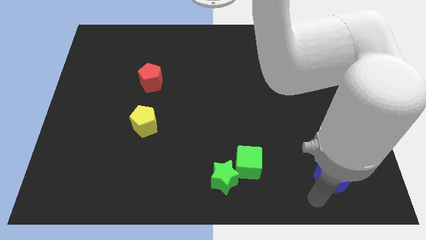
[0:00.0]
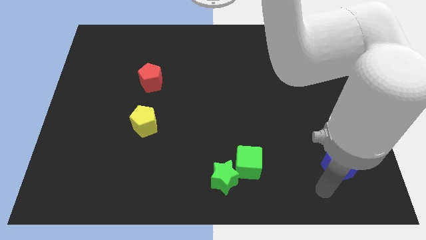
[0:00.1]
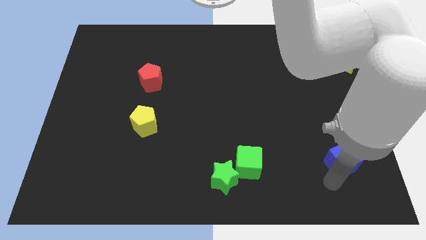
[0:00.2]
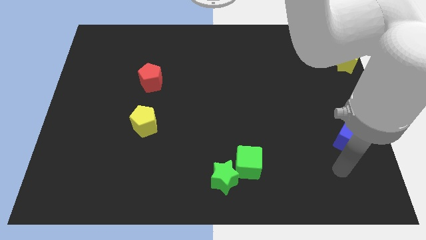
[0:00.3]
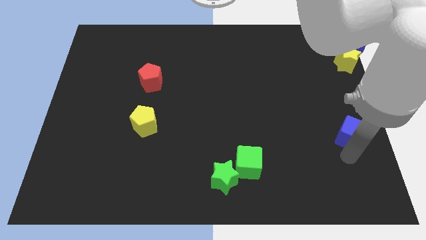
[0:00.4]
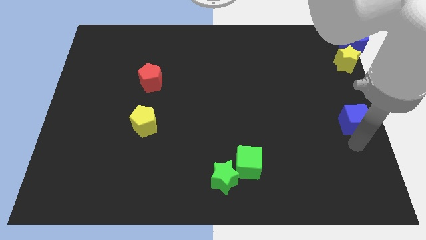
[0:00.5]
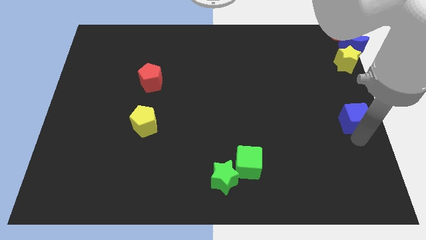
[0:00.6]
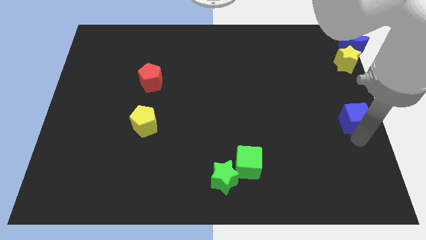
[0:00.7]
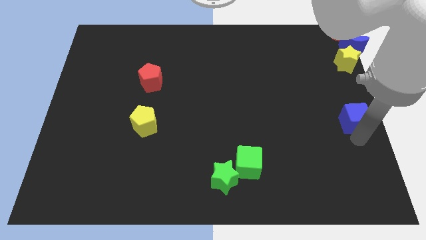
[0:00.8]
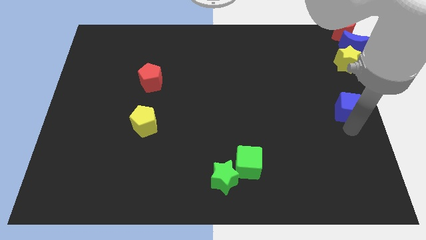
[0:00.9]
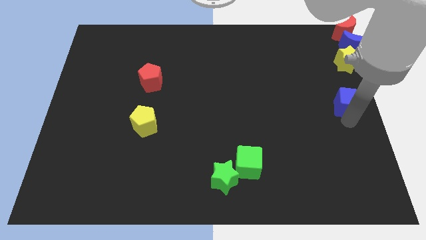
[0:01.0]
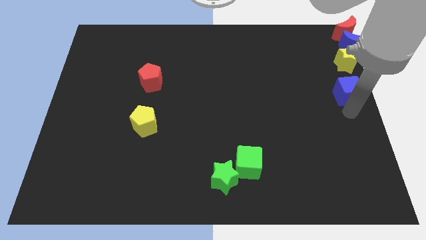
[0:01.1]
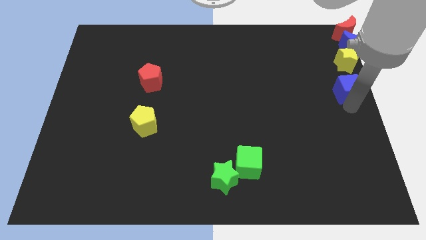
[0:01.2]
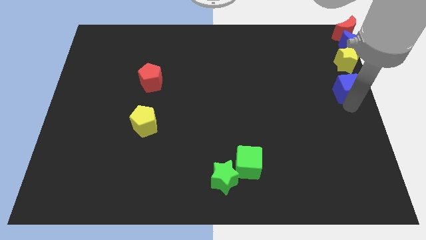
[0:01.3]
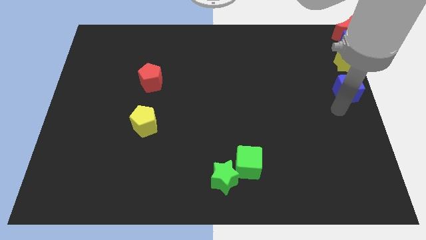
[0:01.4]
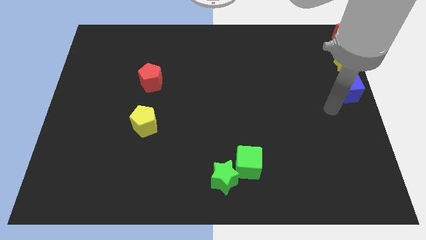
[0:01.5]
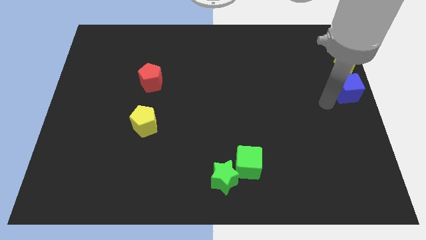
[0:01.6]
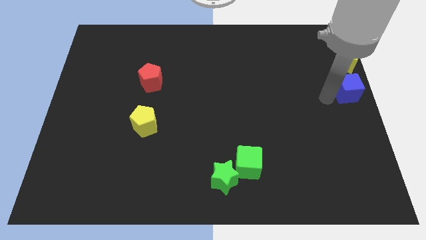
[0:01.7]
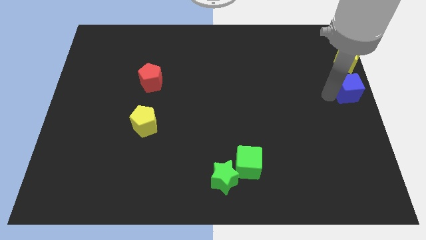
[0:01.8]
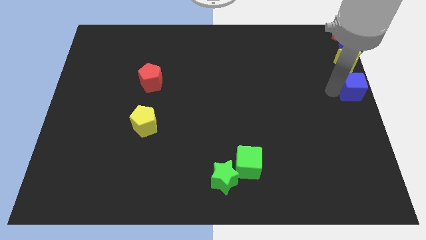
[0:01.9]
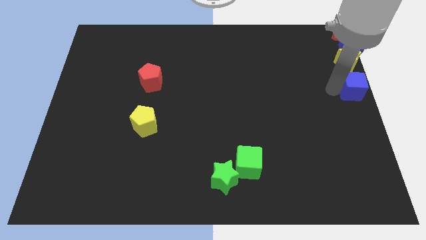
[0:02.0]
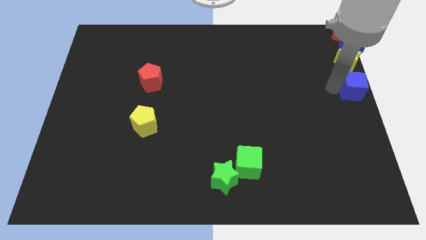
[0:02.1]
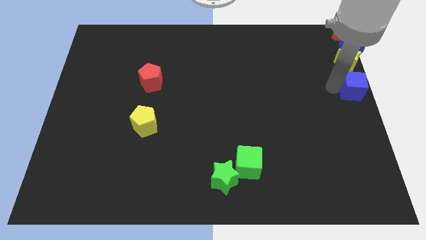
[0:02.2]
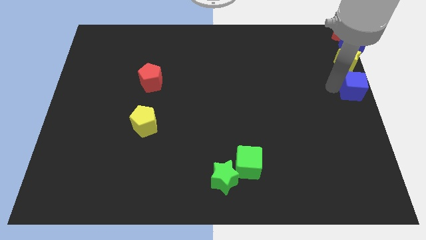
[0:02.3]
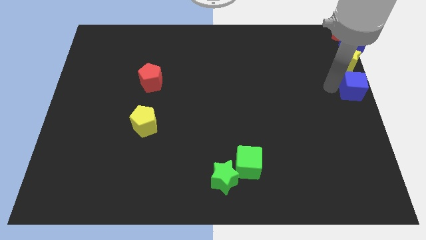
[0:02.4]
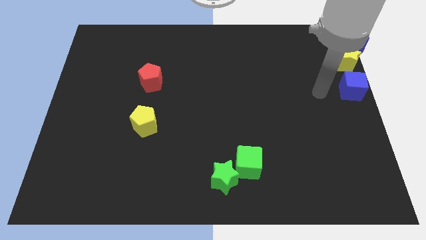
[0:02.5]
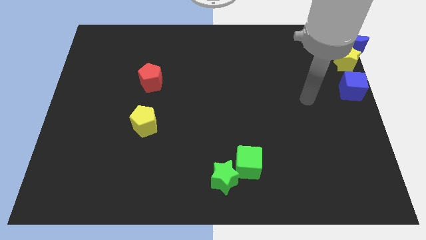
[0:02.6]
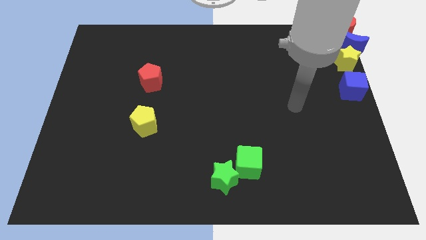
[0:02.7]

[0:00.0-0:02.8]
push blue moon towards yellow star

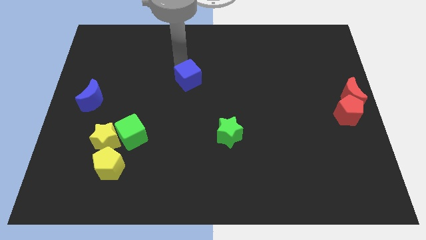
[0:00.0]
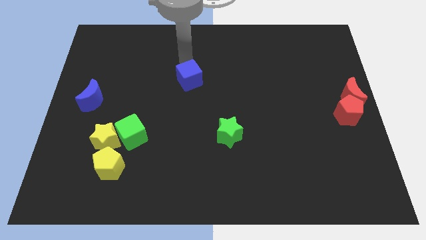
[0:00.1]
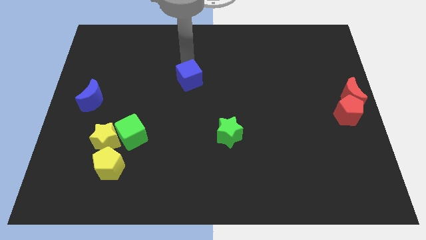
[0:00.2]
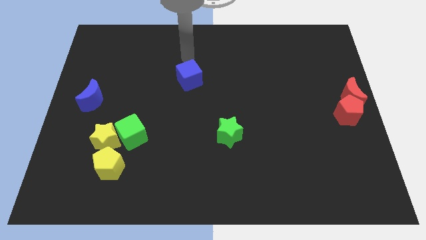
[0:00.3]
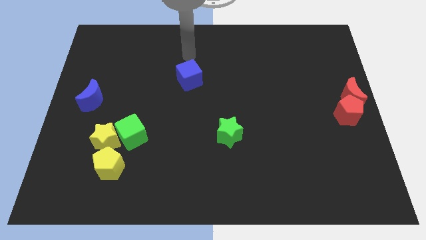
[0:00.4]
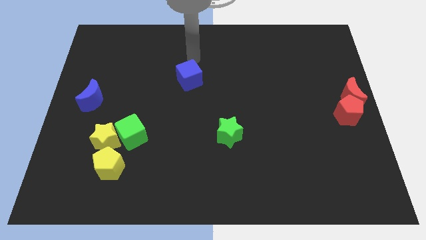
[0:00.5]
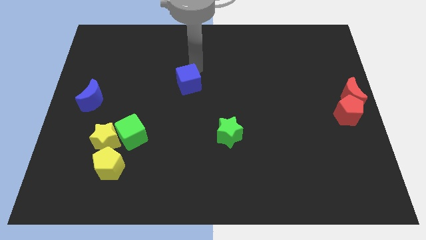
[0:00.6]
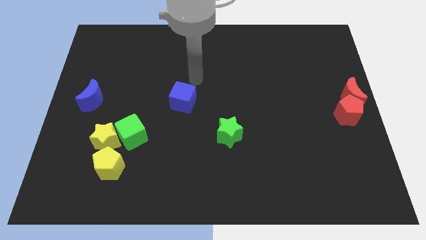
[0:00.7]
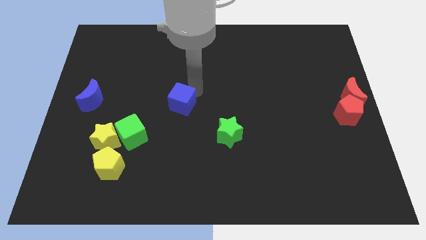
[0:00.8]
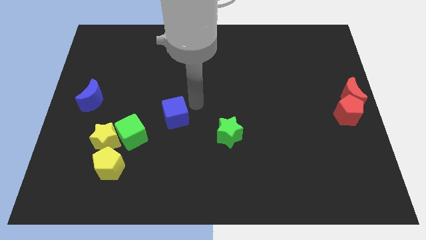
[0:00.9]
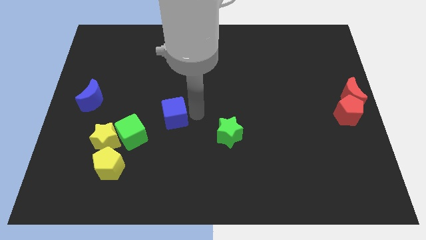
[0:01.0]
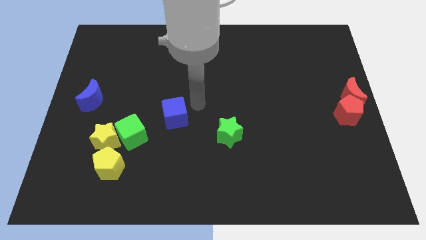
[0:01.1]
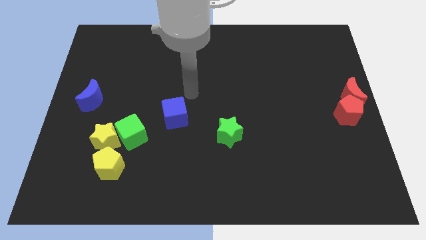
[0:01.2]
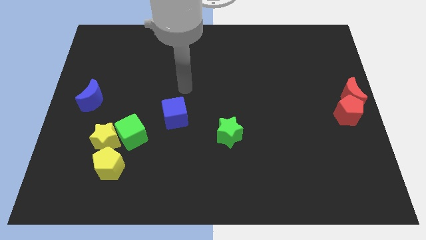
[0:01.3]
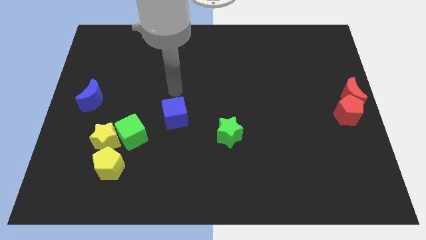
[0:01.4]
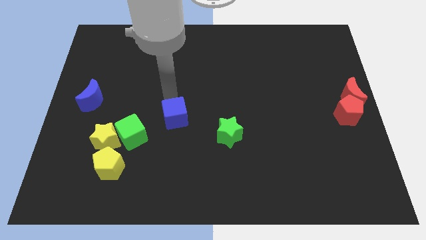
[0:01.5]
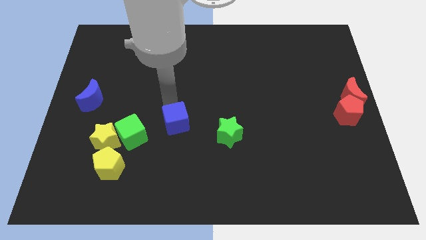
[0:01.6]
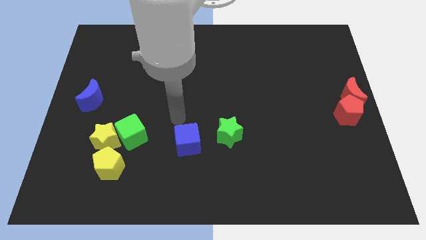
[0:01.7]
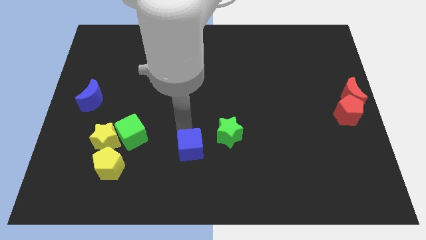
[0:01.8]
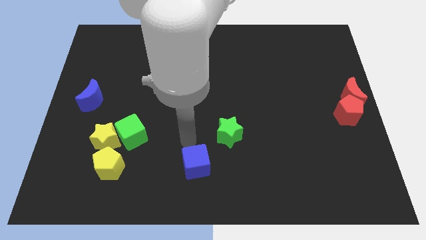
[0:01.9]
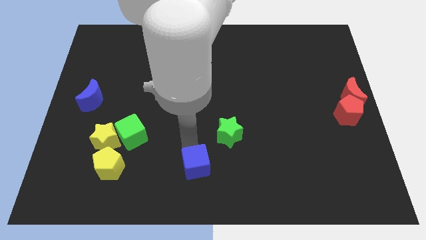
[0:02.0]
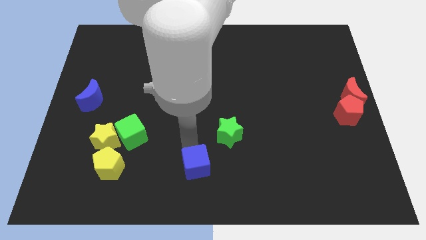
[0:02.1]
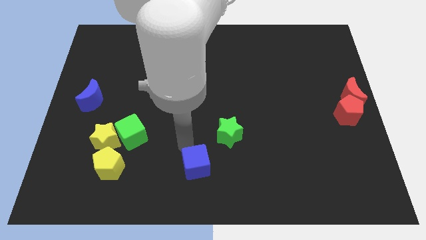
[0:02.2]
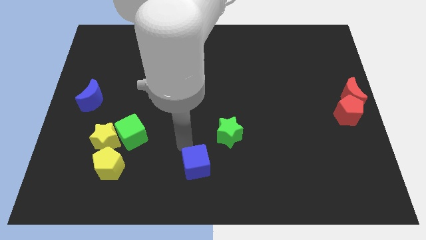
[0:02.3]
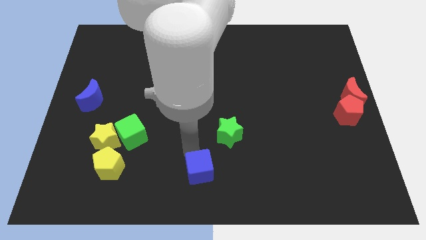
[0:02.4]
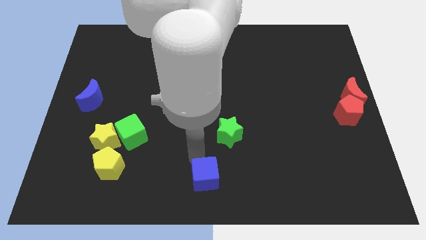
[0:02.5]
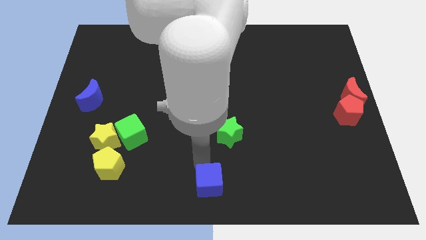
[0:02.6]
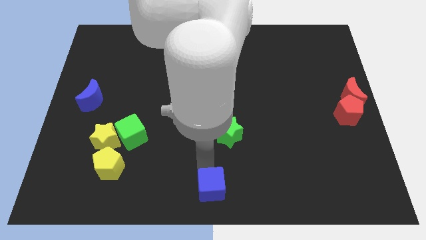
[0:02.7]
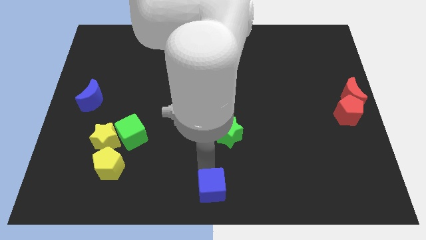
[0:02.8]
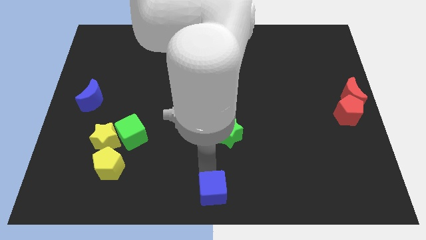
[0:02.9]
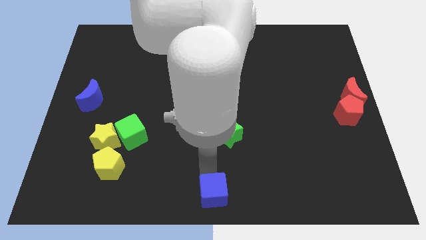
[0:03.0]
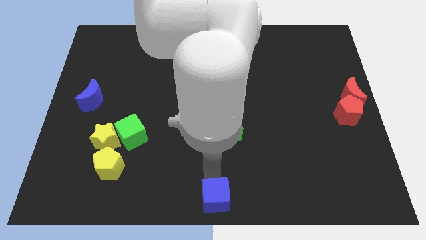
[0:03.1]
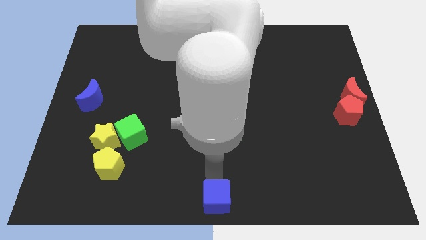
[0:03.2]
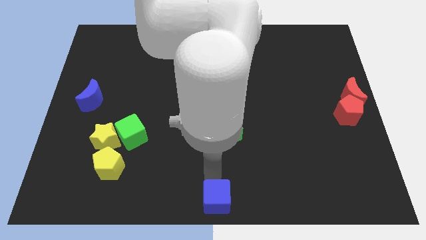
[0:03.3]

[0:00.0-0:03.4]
push blue cube towards bottom middle of the board

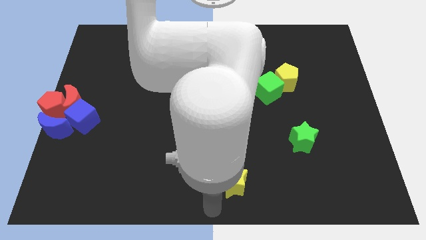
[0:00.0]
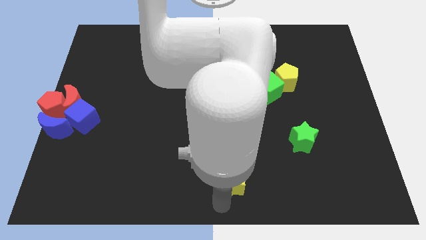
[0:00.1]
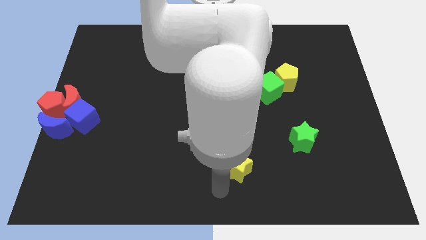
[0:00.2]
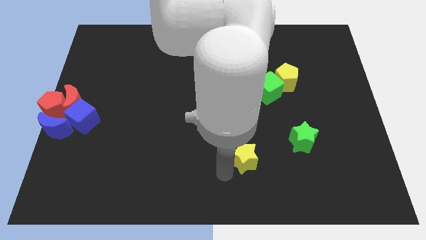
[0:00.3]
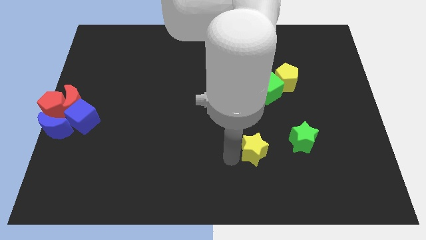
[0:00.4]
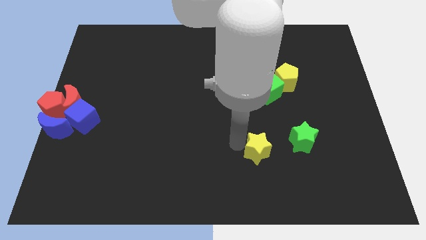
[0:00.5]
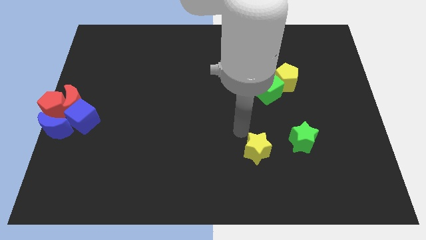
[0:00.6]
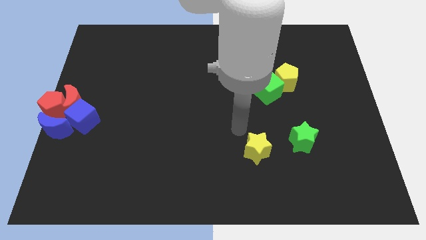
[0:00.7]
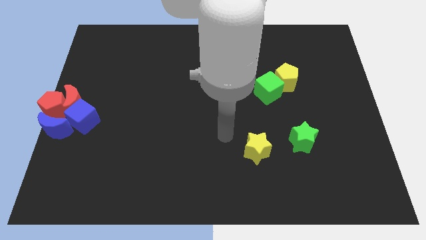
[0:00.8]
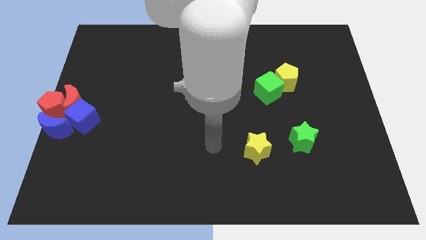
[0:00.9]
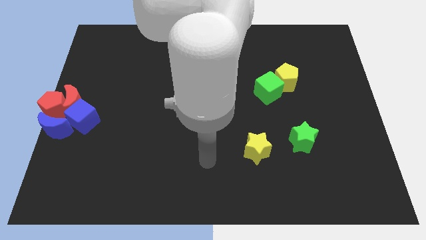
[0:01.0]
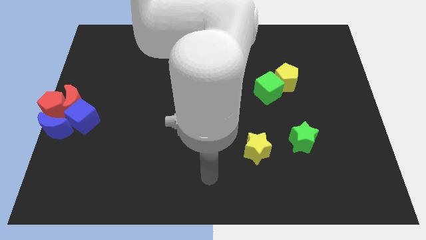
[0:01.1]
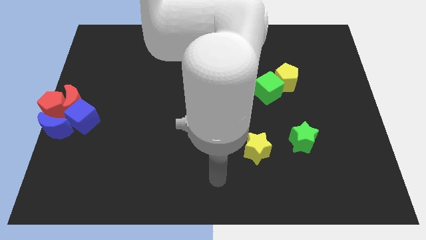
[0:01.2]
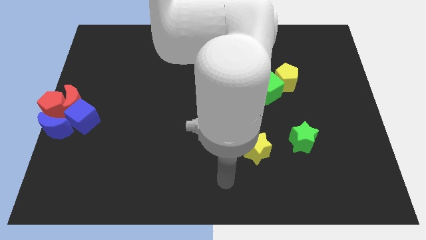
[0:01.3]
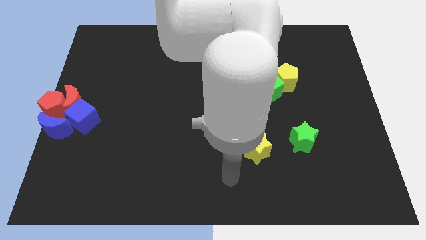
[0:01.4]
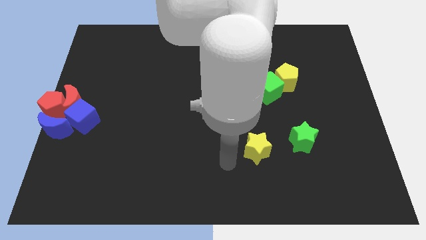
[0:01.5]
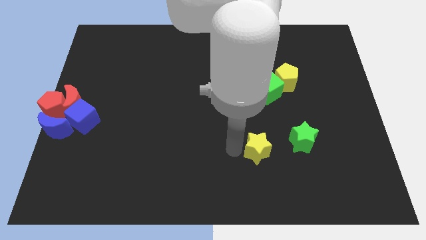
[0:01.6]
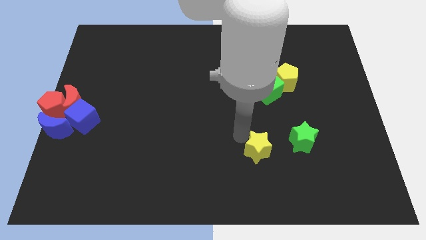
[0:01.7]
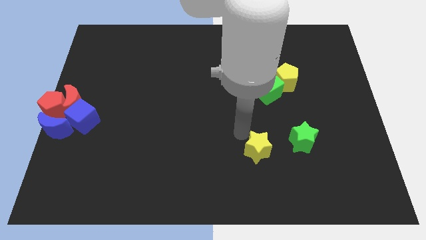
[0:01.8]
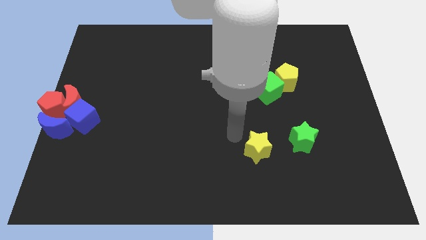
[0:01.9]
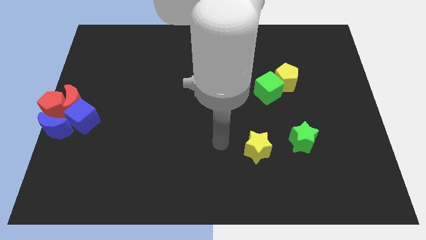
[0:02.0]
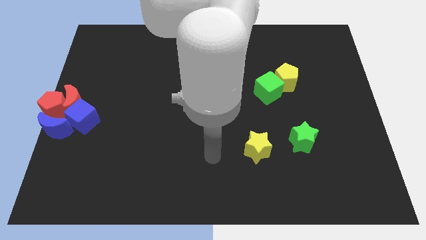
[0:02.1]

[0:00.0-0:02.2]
place yellow star to the left green star

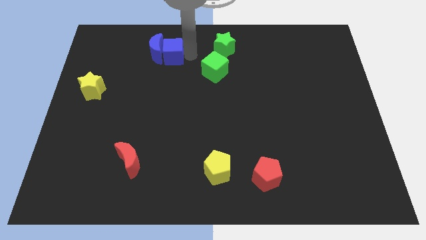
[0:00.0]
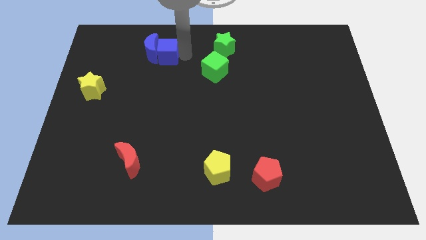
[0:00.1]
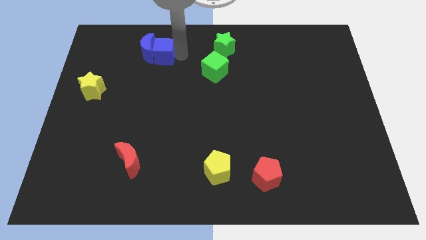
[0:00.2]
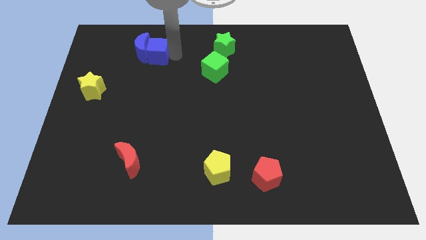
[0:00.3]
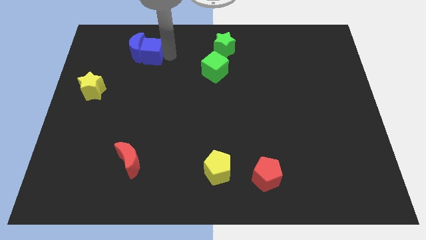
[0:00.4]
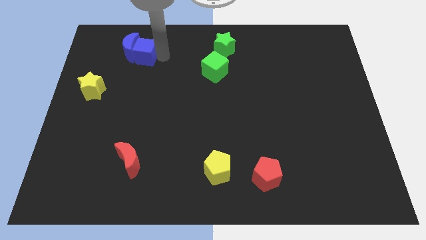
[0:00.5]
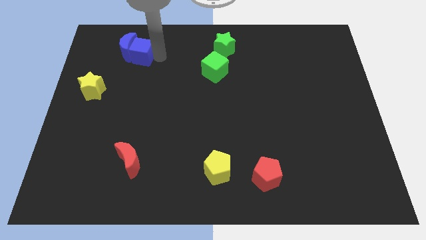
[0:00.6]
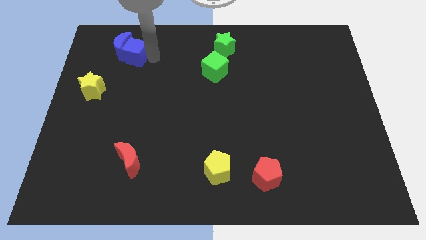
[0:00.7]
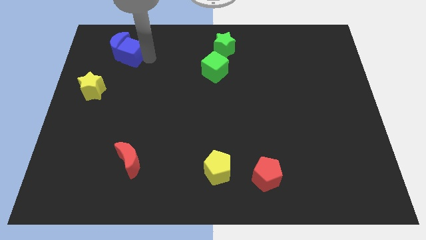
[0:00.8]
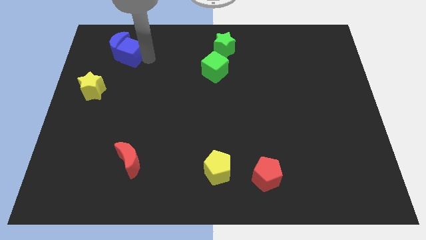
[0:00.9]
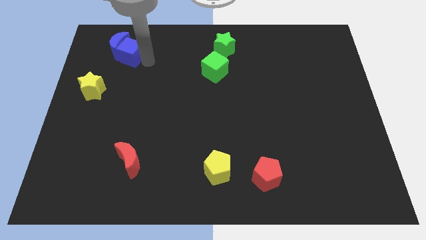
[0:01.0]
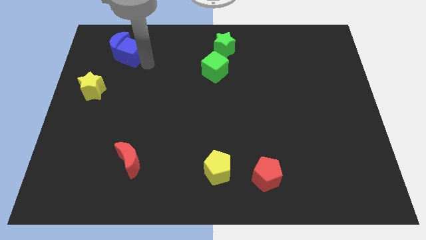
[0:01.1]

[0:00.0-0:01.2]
move the blue blocks to the top left
